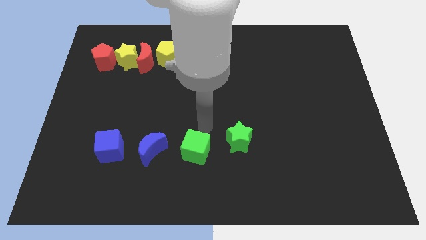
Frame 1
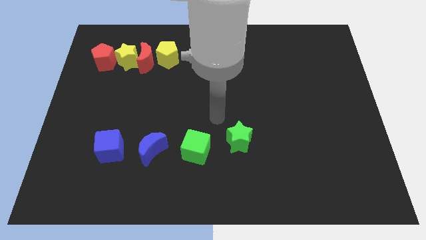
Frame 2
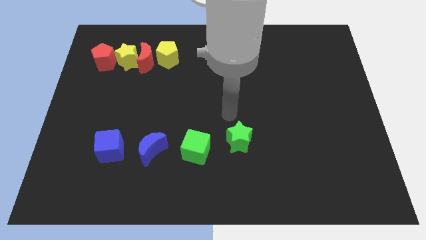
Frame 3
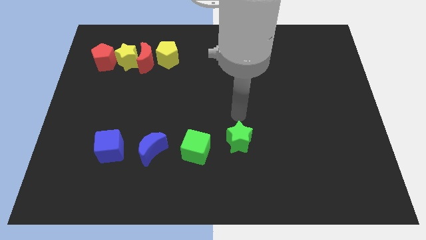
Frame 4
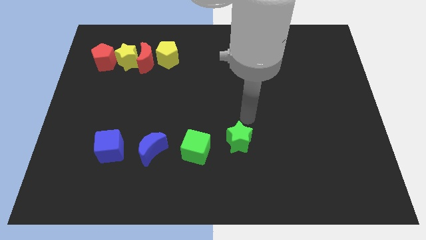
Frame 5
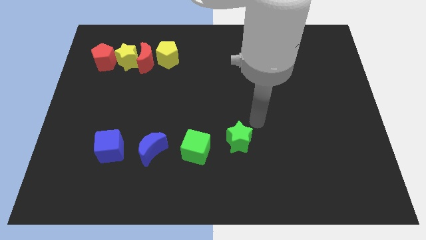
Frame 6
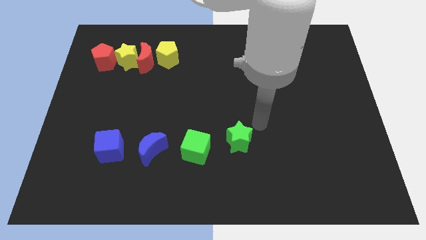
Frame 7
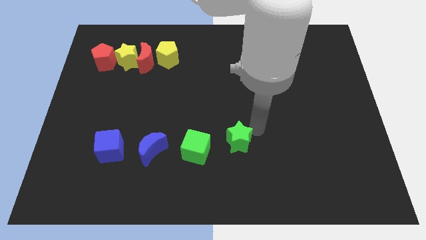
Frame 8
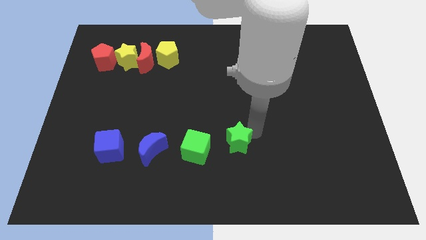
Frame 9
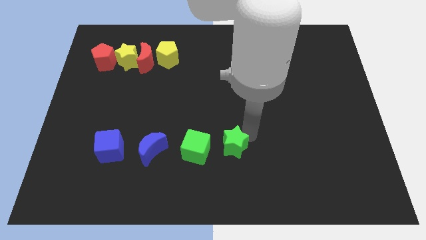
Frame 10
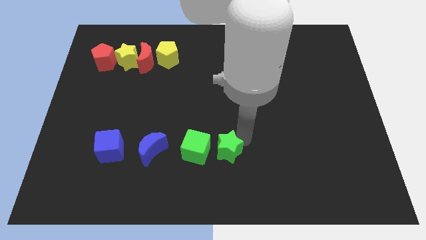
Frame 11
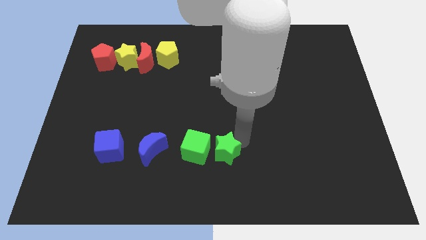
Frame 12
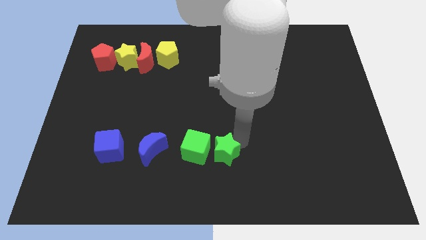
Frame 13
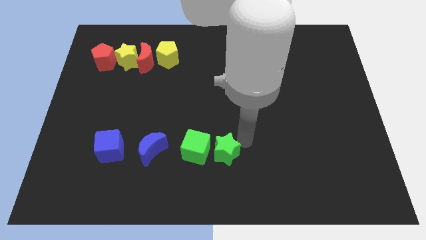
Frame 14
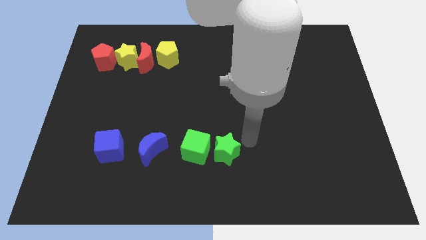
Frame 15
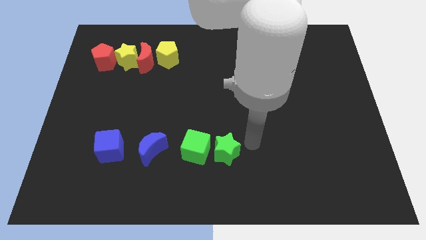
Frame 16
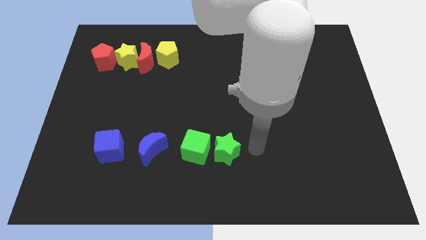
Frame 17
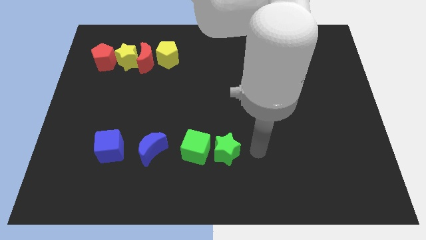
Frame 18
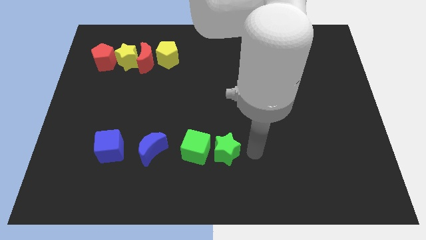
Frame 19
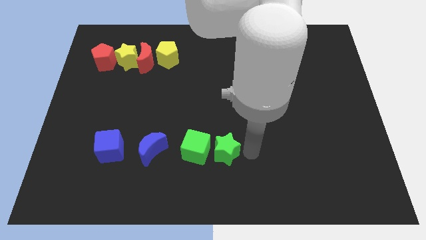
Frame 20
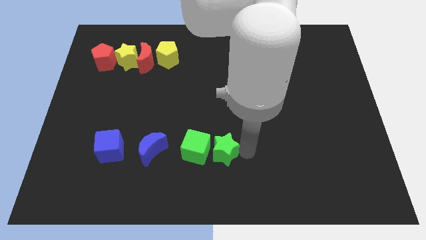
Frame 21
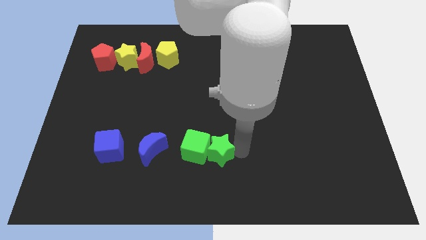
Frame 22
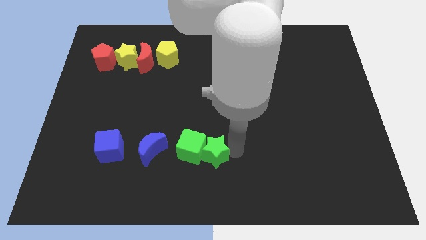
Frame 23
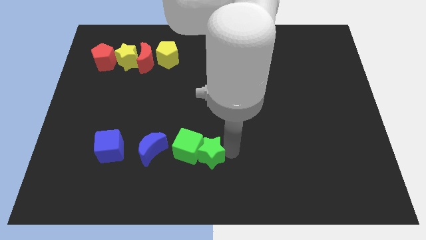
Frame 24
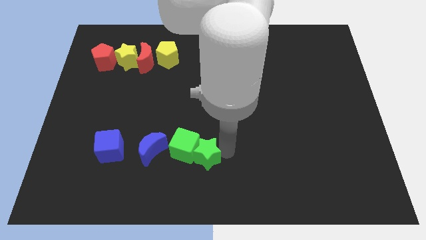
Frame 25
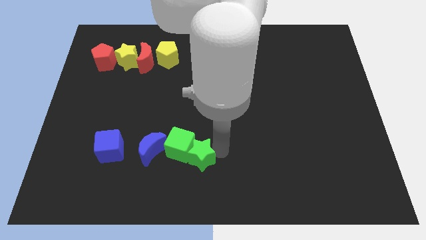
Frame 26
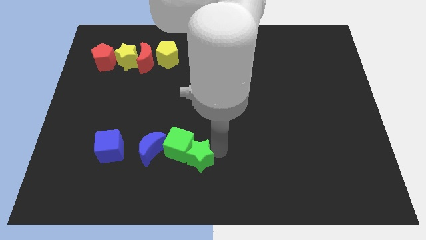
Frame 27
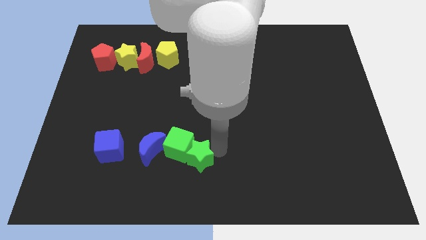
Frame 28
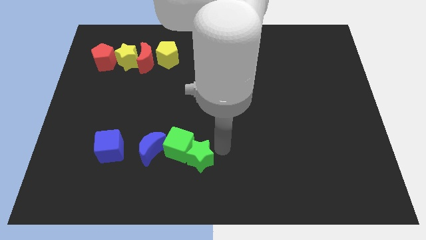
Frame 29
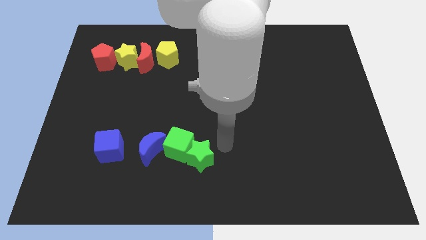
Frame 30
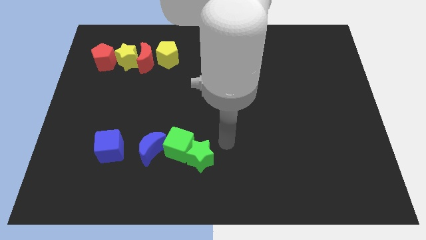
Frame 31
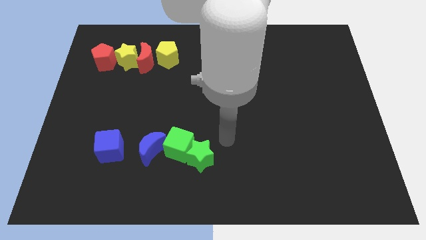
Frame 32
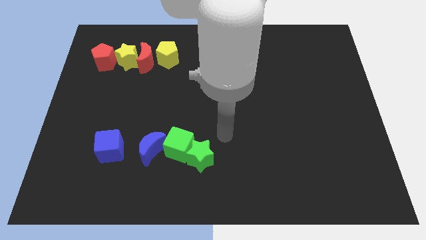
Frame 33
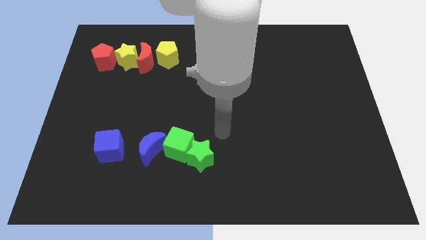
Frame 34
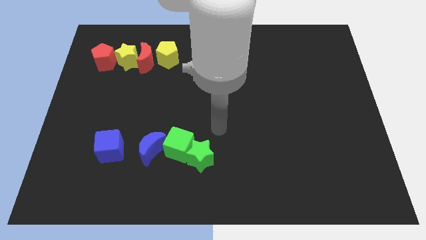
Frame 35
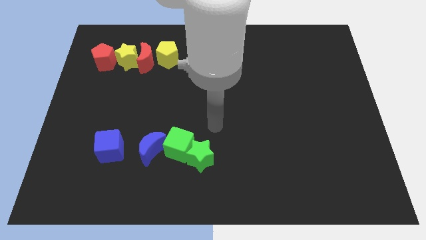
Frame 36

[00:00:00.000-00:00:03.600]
push the green cube slightly with green star

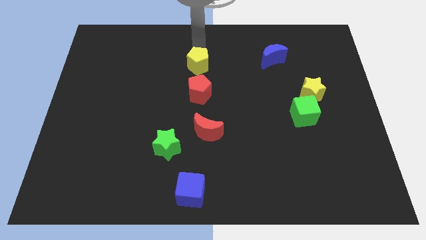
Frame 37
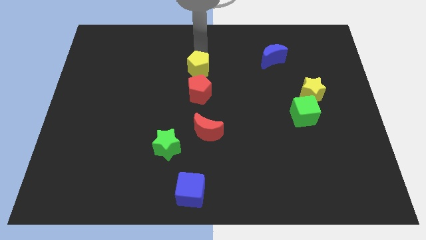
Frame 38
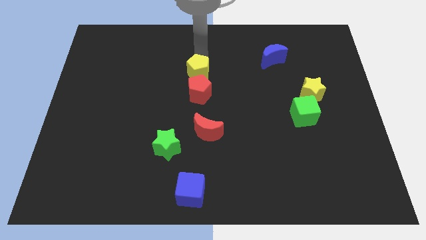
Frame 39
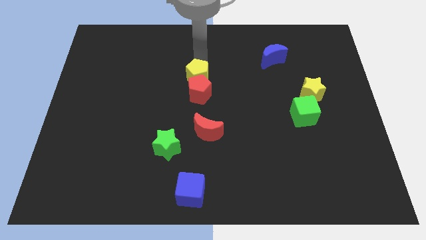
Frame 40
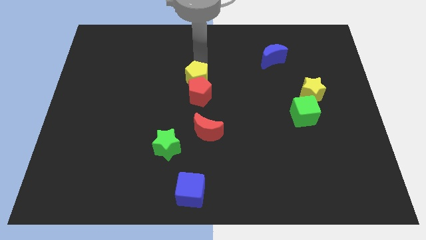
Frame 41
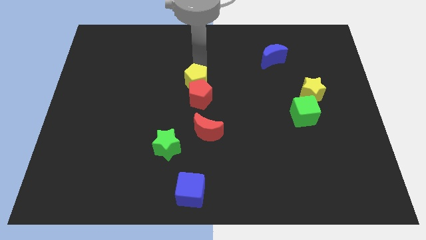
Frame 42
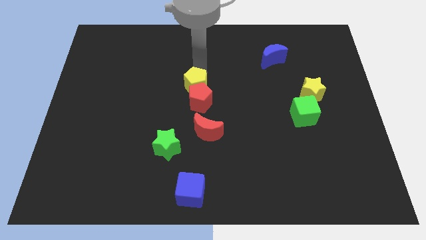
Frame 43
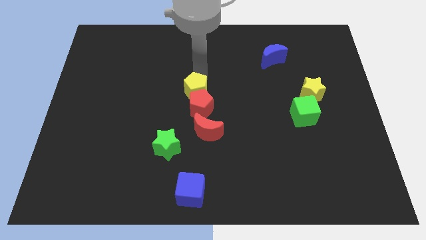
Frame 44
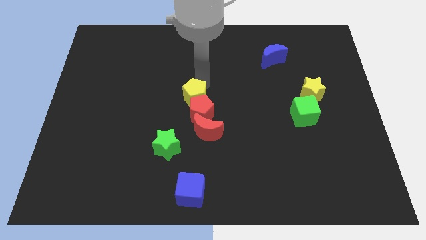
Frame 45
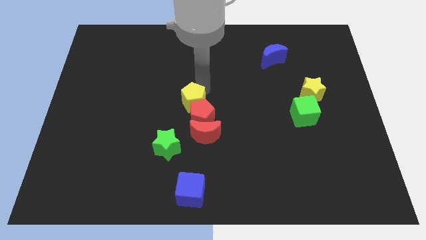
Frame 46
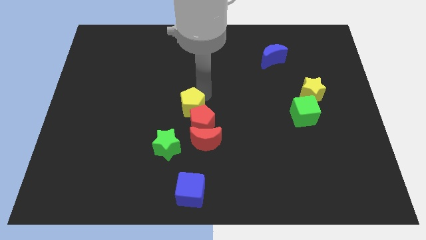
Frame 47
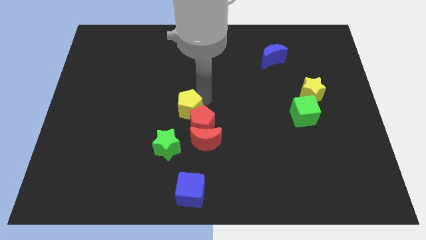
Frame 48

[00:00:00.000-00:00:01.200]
place yellow pentagon above green star

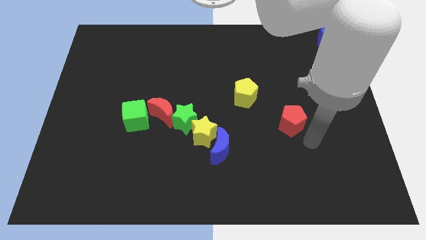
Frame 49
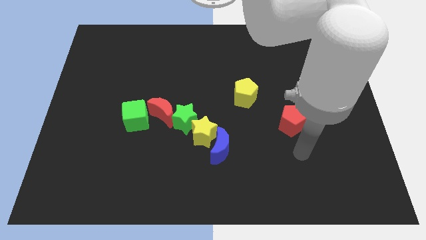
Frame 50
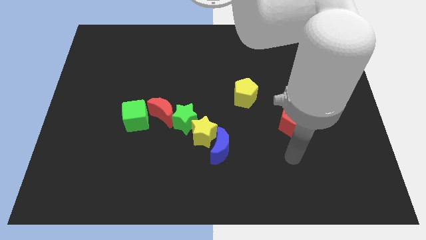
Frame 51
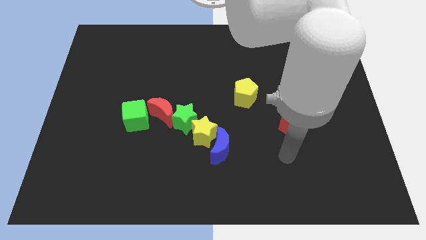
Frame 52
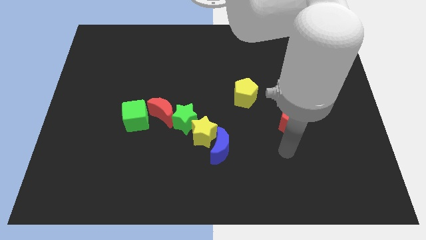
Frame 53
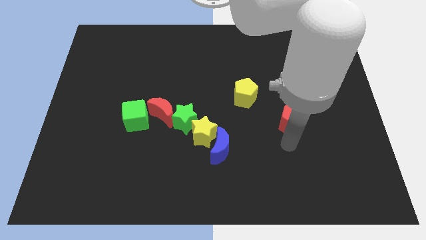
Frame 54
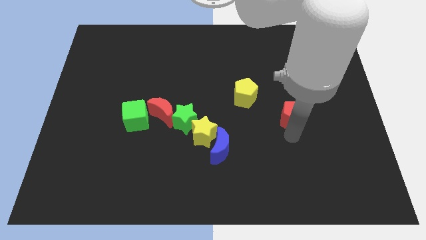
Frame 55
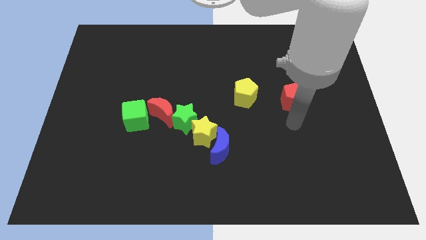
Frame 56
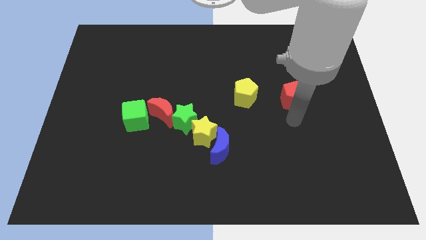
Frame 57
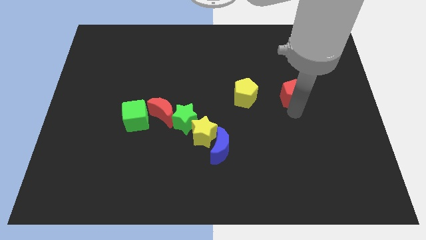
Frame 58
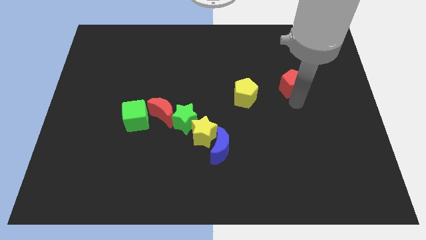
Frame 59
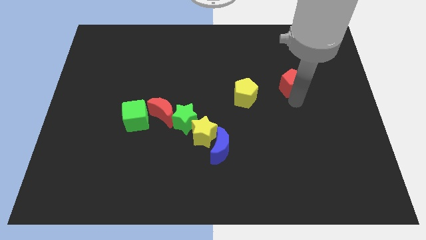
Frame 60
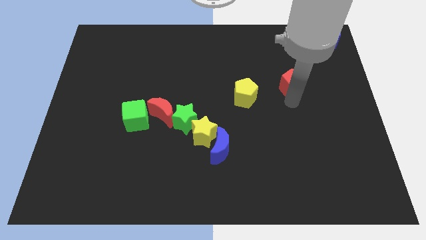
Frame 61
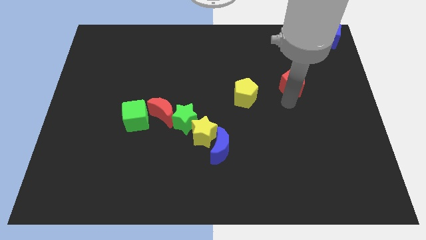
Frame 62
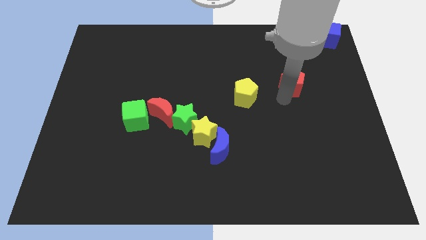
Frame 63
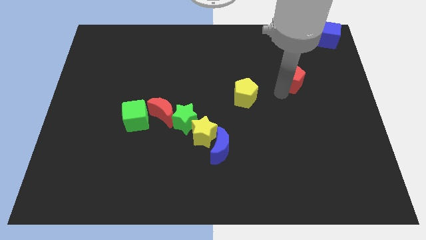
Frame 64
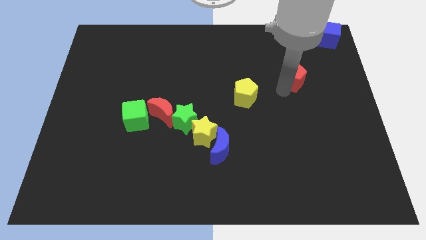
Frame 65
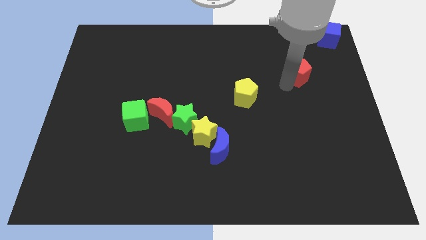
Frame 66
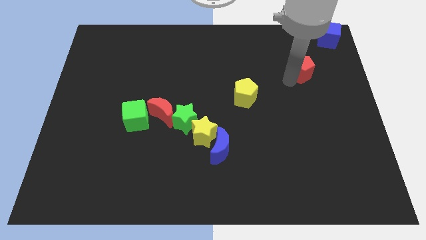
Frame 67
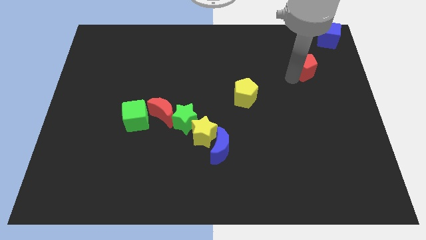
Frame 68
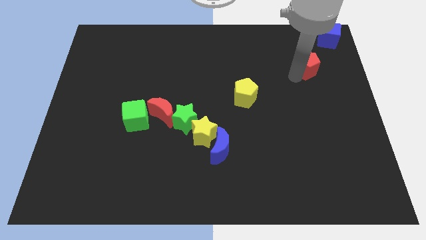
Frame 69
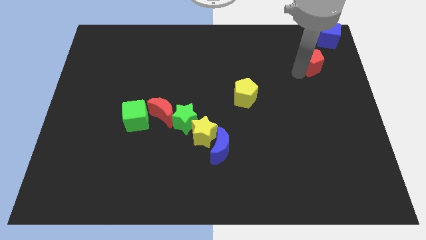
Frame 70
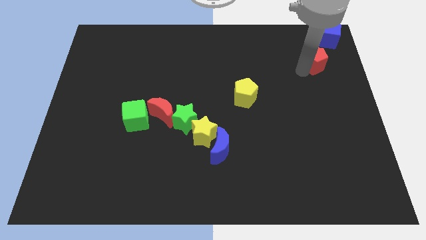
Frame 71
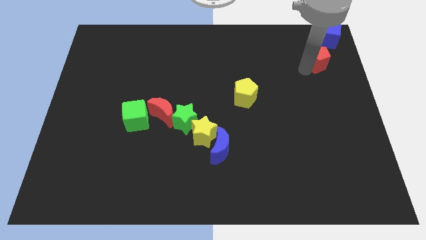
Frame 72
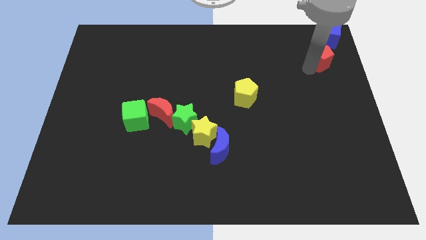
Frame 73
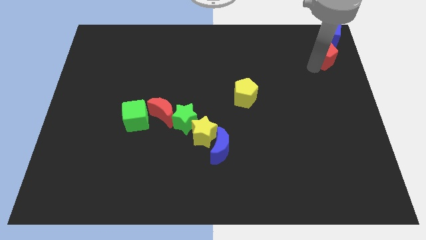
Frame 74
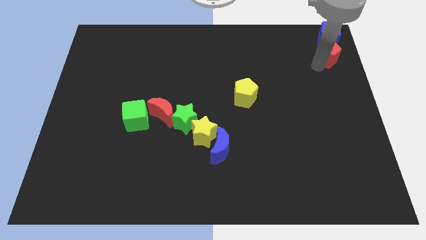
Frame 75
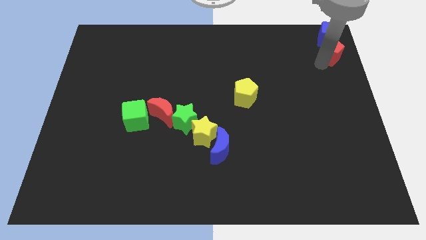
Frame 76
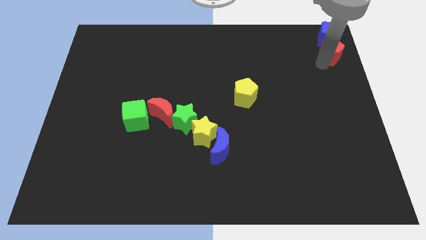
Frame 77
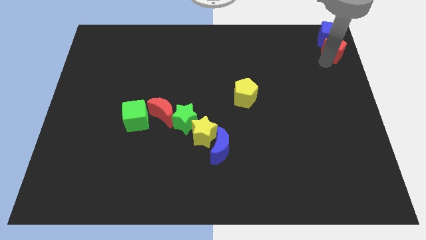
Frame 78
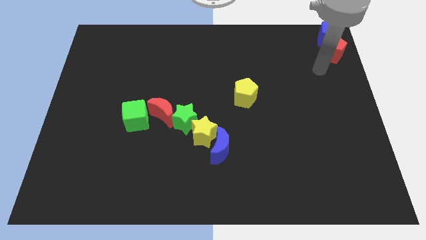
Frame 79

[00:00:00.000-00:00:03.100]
move the red pentagon into the blue cube

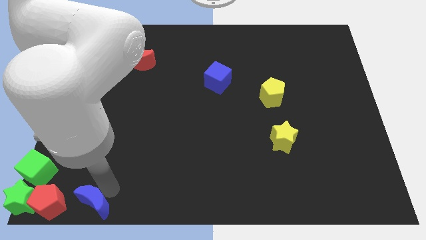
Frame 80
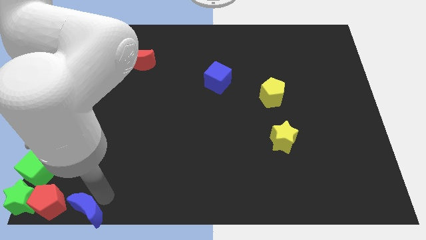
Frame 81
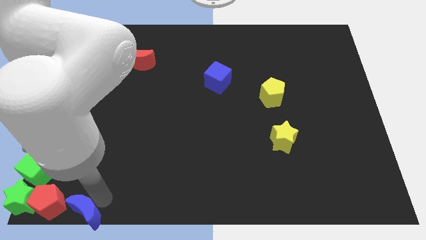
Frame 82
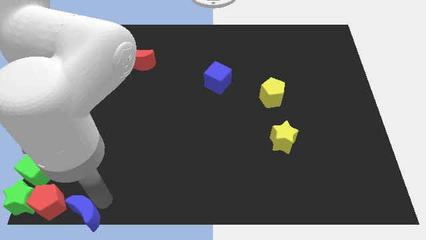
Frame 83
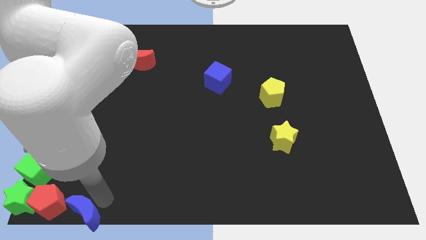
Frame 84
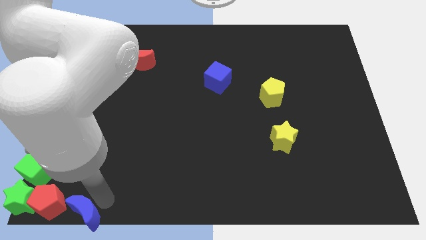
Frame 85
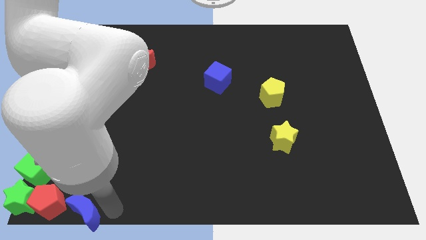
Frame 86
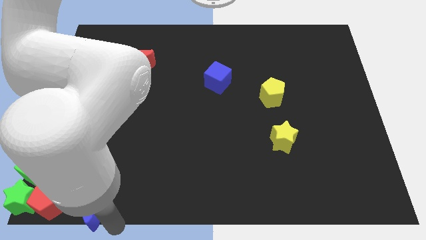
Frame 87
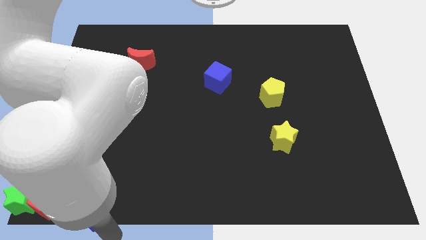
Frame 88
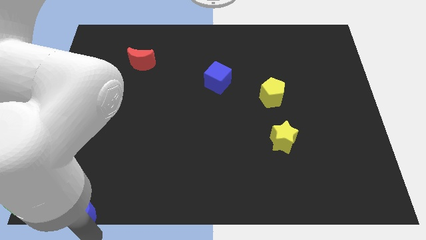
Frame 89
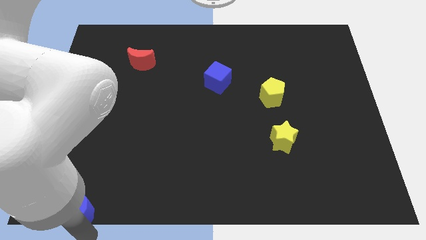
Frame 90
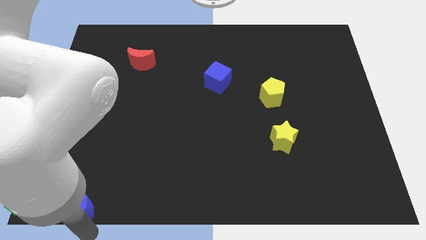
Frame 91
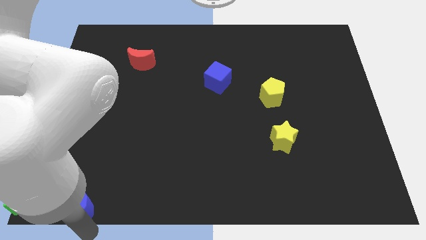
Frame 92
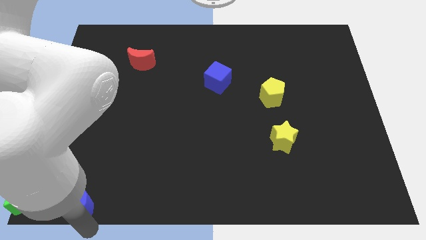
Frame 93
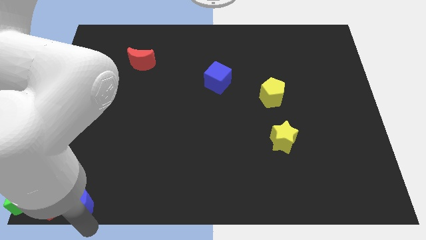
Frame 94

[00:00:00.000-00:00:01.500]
move the blue crescent to the right side of the red pentagon
